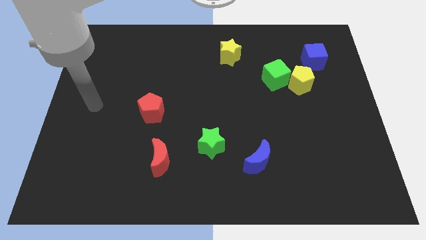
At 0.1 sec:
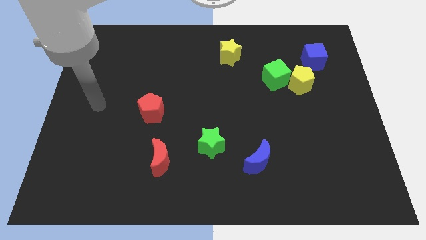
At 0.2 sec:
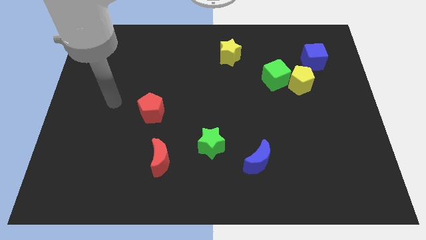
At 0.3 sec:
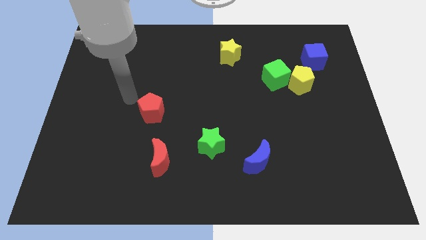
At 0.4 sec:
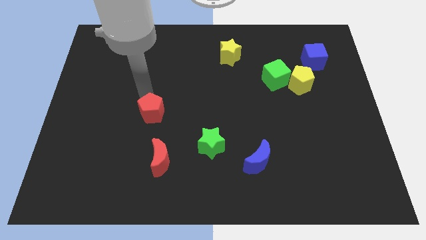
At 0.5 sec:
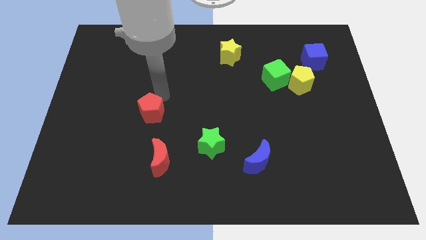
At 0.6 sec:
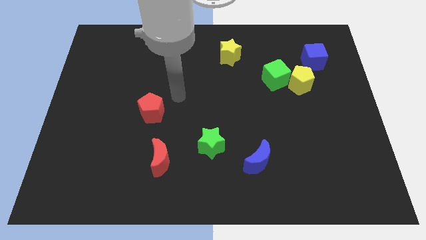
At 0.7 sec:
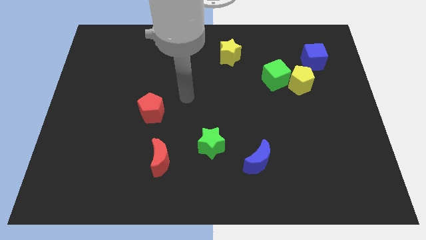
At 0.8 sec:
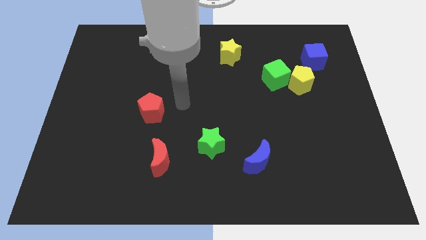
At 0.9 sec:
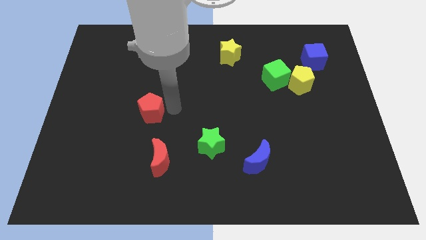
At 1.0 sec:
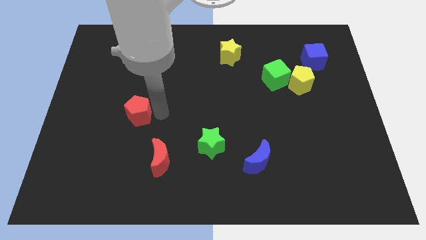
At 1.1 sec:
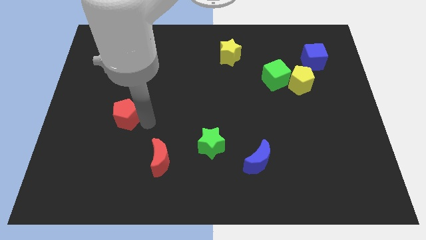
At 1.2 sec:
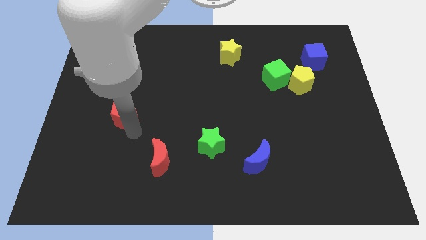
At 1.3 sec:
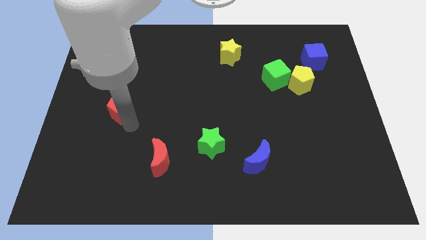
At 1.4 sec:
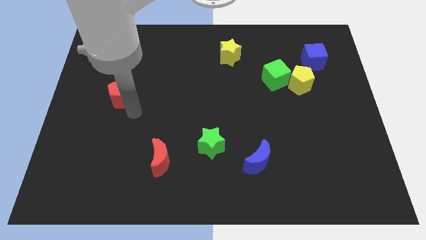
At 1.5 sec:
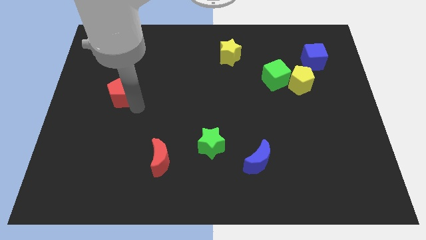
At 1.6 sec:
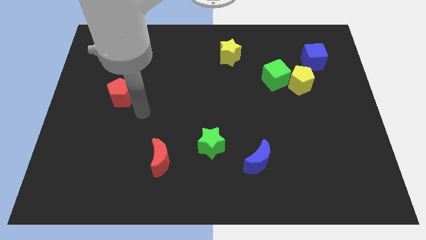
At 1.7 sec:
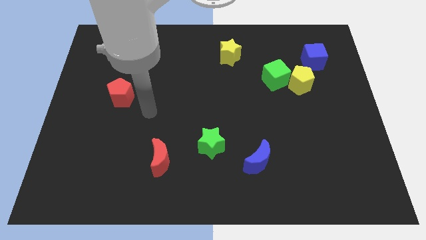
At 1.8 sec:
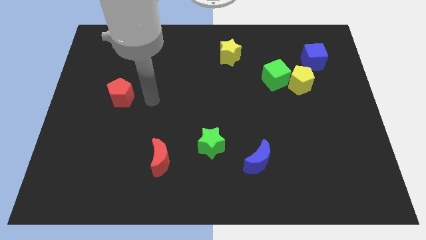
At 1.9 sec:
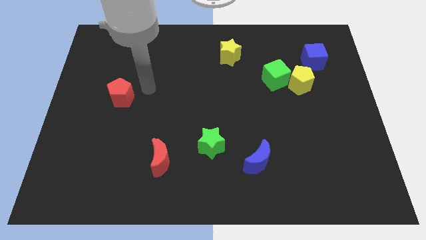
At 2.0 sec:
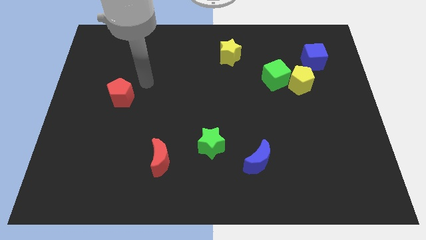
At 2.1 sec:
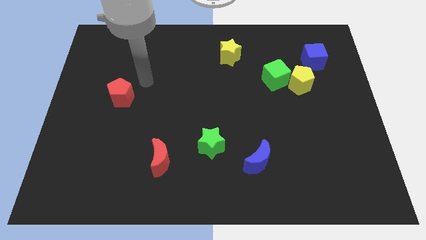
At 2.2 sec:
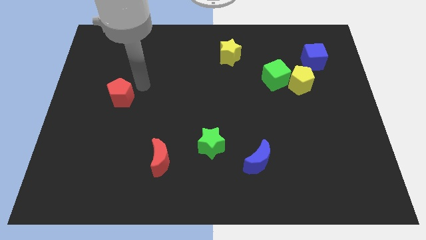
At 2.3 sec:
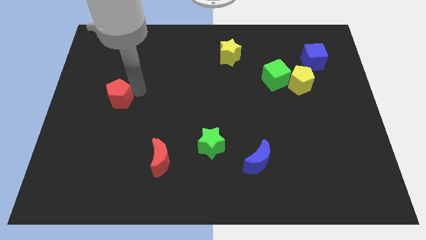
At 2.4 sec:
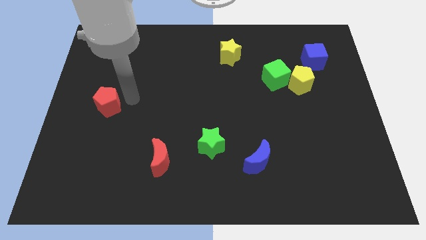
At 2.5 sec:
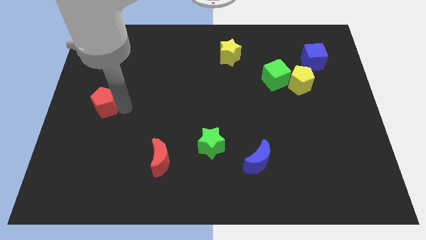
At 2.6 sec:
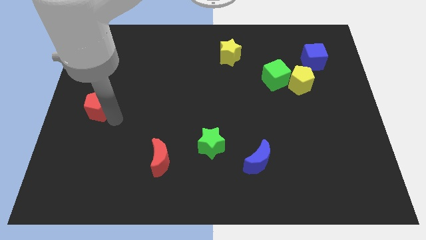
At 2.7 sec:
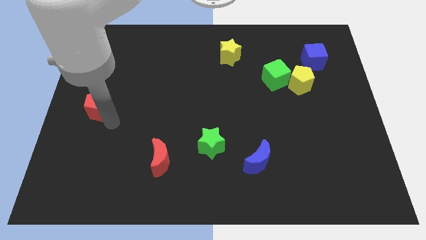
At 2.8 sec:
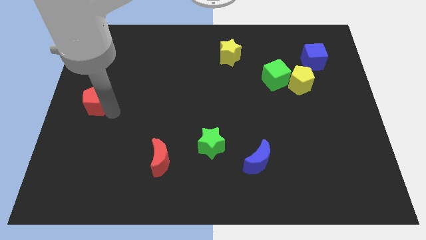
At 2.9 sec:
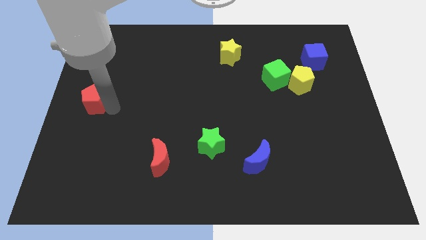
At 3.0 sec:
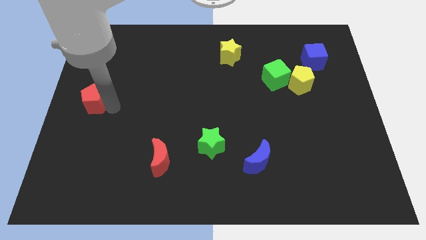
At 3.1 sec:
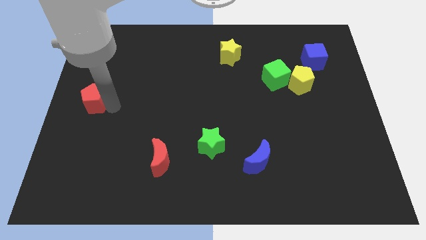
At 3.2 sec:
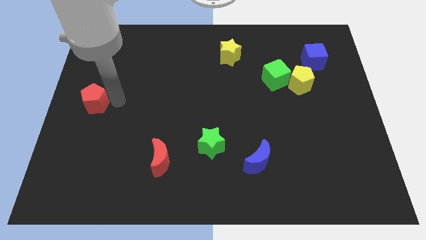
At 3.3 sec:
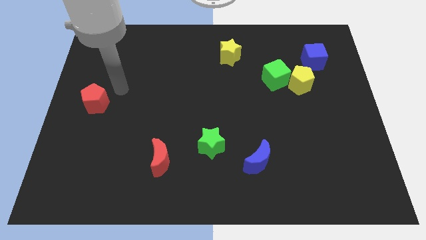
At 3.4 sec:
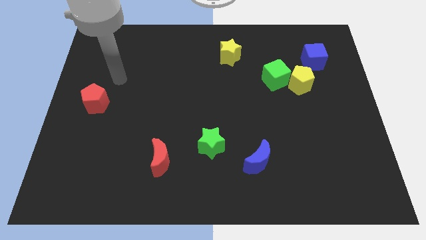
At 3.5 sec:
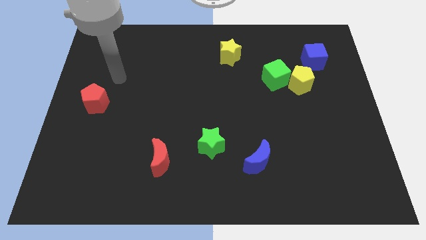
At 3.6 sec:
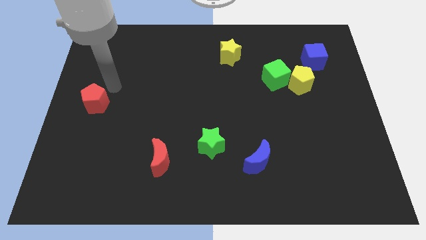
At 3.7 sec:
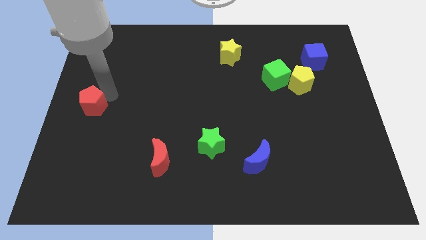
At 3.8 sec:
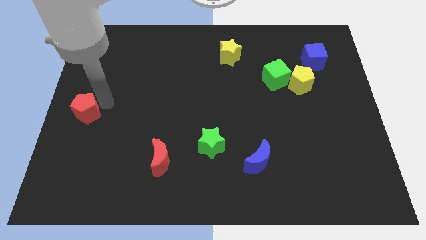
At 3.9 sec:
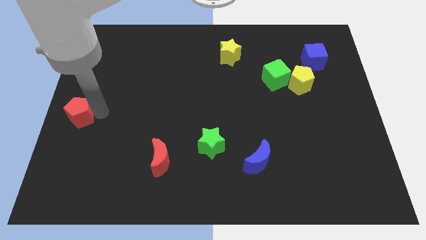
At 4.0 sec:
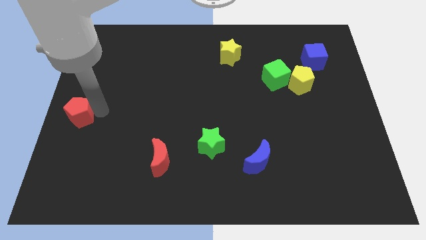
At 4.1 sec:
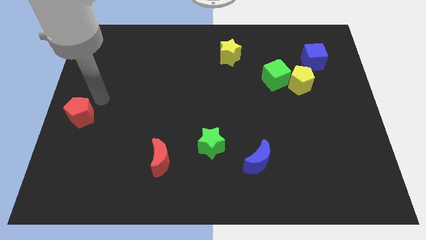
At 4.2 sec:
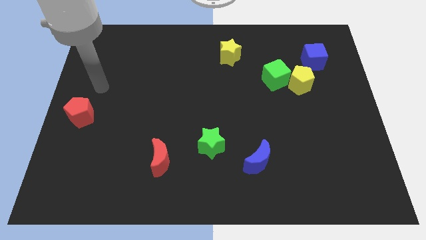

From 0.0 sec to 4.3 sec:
push the red pentagon to the center left side of the board

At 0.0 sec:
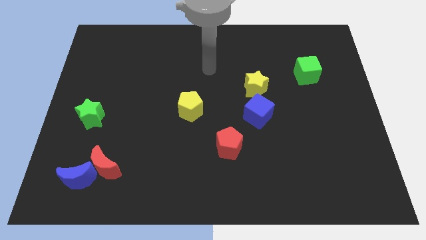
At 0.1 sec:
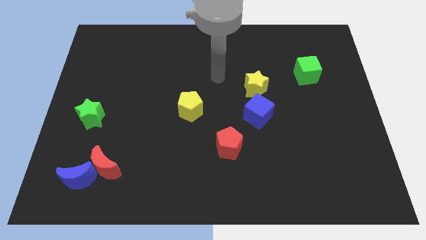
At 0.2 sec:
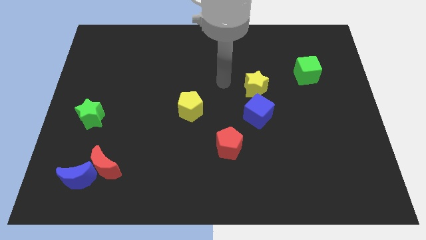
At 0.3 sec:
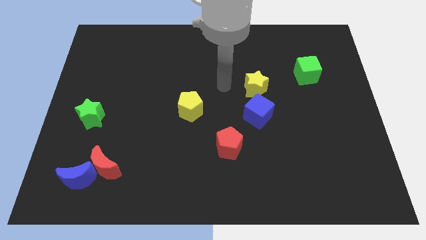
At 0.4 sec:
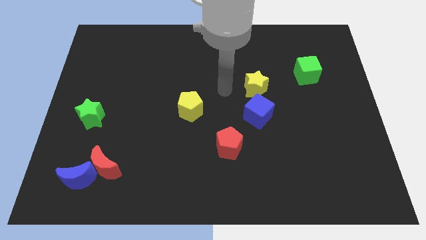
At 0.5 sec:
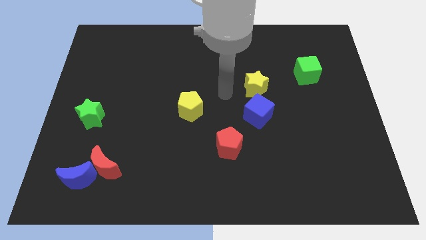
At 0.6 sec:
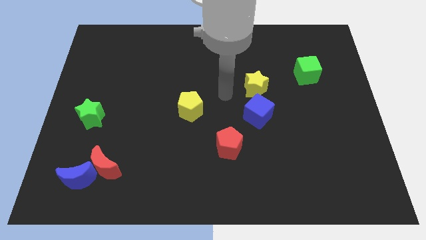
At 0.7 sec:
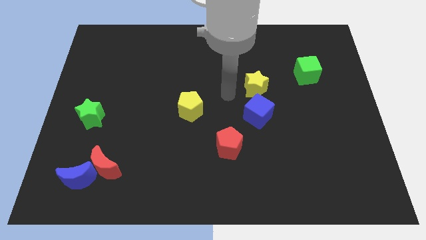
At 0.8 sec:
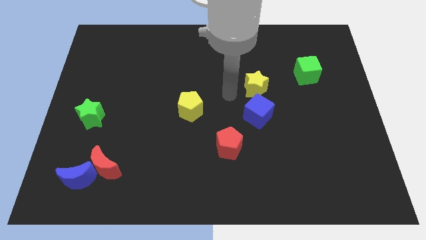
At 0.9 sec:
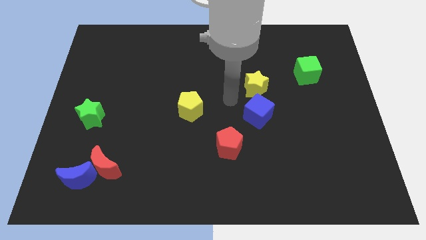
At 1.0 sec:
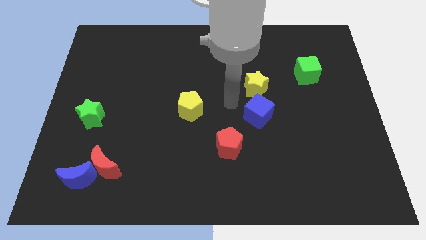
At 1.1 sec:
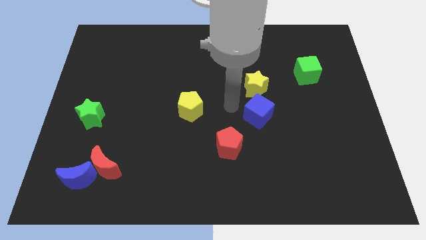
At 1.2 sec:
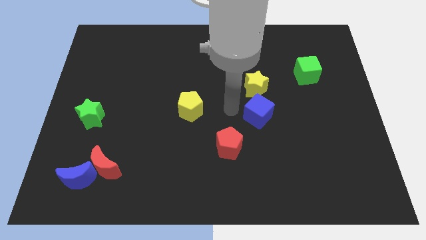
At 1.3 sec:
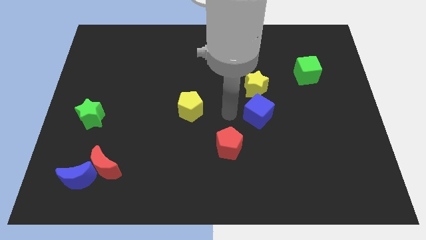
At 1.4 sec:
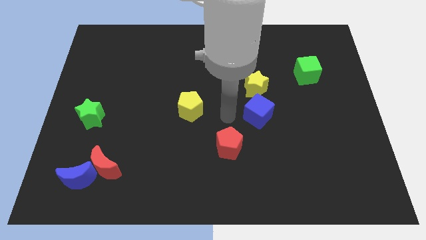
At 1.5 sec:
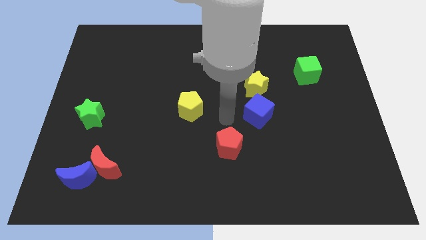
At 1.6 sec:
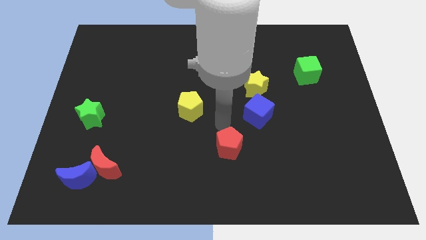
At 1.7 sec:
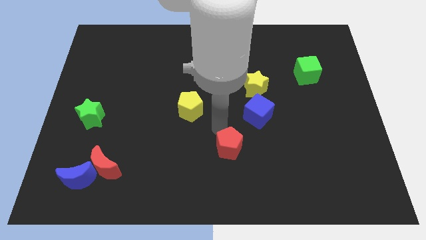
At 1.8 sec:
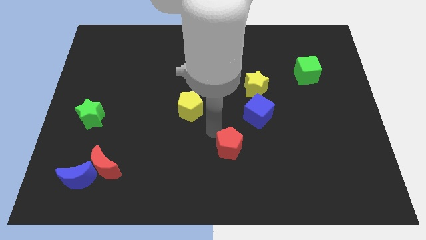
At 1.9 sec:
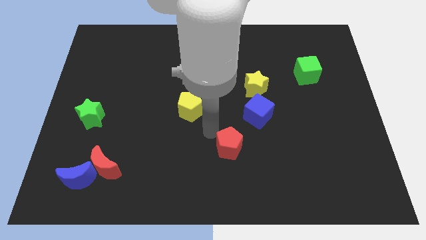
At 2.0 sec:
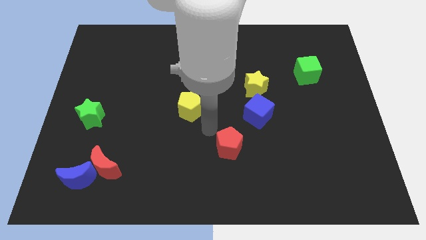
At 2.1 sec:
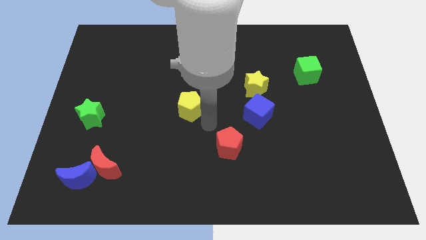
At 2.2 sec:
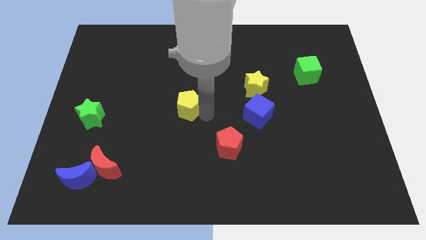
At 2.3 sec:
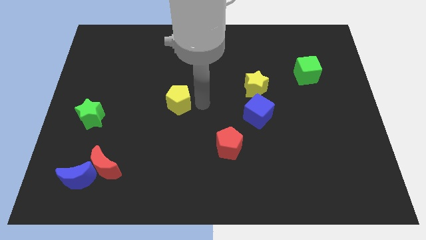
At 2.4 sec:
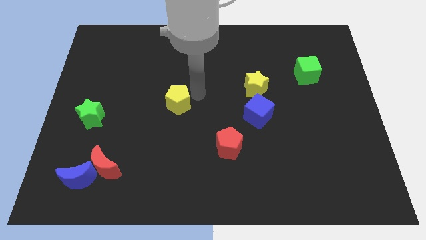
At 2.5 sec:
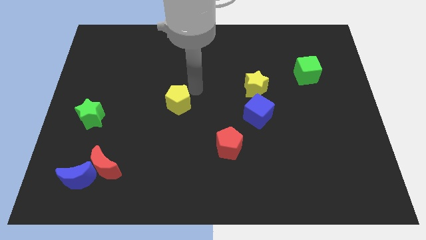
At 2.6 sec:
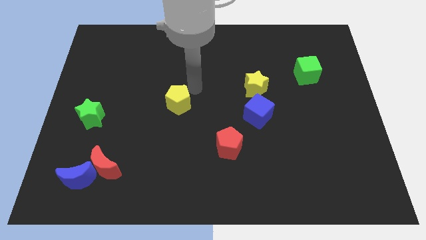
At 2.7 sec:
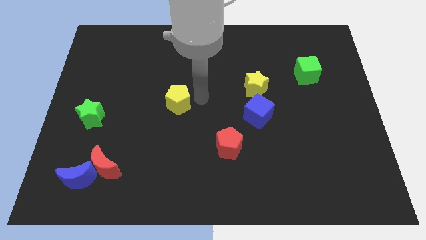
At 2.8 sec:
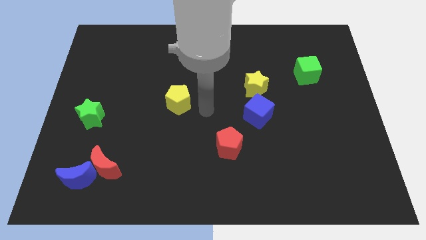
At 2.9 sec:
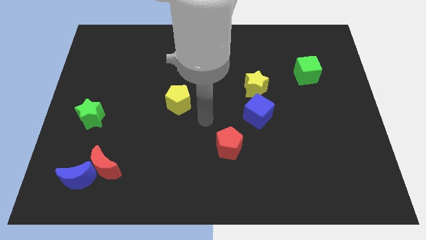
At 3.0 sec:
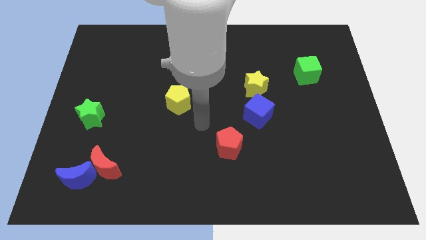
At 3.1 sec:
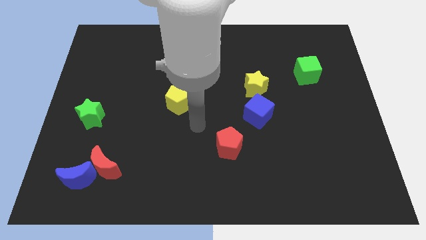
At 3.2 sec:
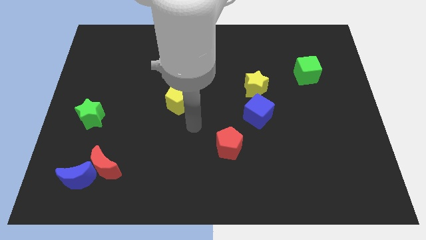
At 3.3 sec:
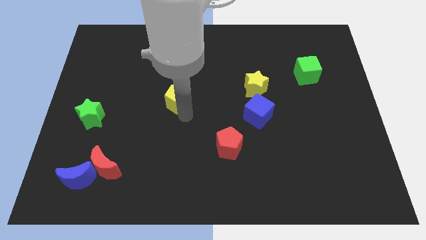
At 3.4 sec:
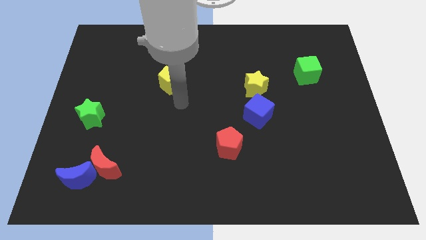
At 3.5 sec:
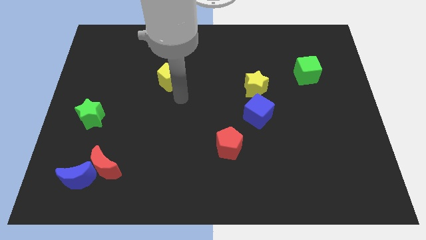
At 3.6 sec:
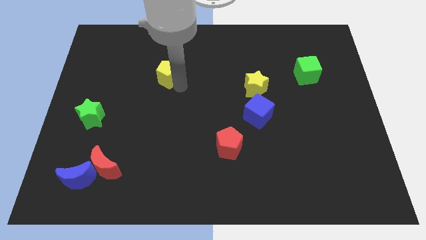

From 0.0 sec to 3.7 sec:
place the yellow pentagon diagonally on the top right side of the green star

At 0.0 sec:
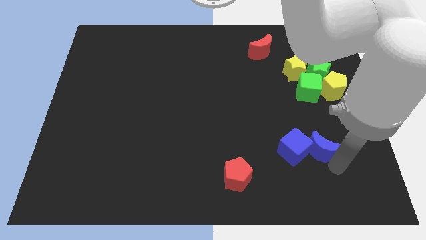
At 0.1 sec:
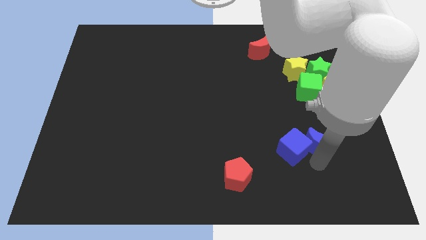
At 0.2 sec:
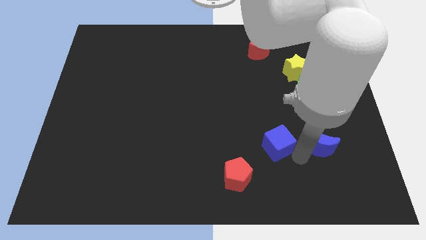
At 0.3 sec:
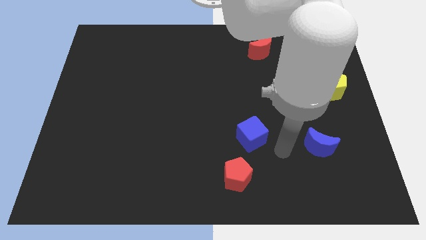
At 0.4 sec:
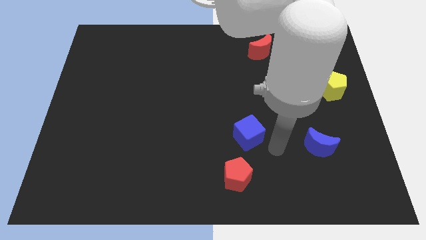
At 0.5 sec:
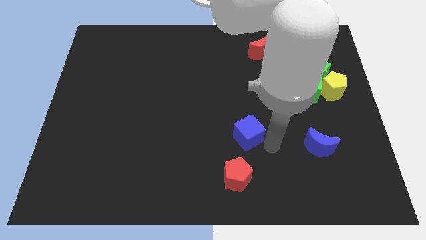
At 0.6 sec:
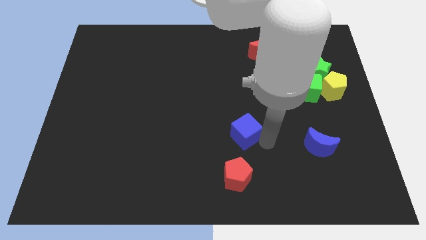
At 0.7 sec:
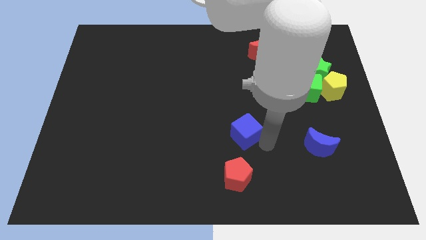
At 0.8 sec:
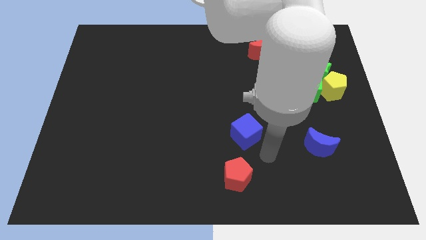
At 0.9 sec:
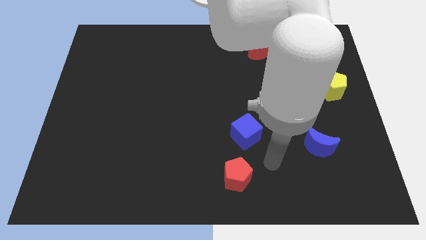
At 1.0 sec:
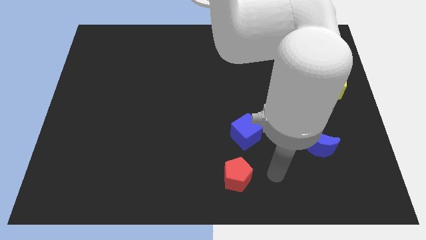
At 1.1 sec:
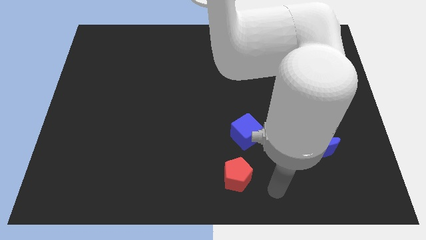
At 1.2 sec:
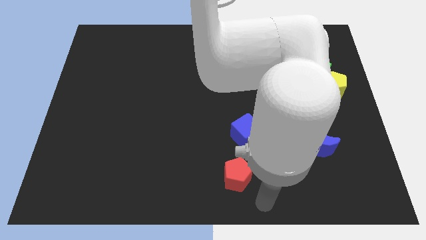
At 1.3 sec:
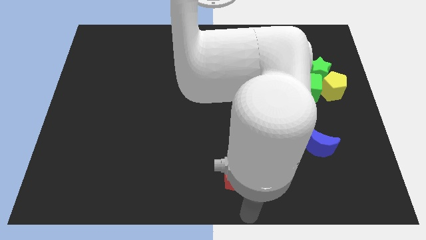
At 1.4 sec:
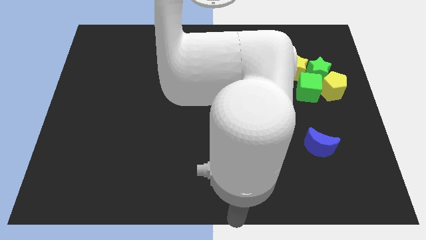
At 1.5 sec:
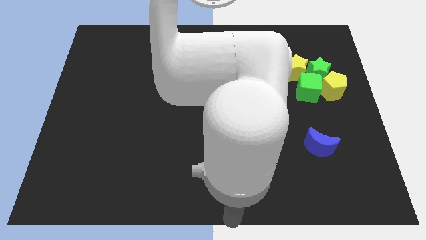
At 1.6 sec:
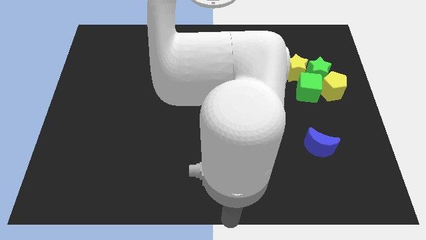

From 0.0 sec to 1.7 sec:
separate the blue cube from the blue moon
